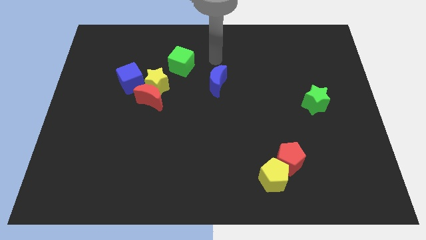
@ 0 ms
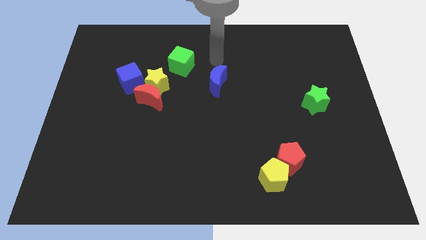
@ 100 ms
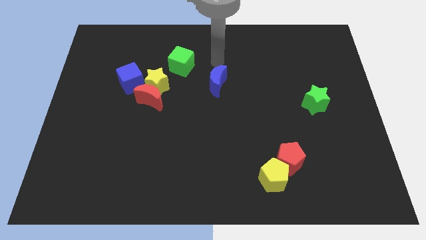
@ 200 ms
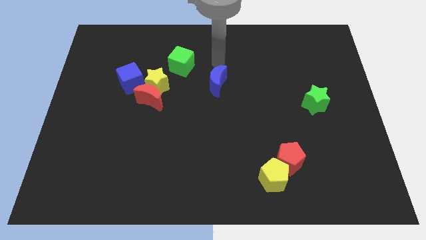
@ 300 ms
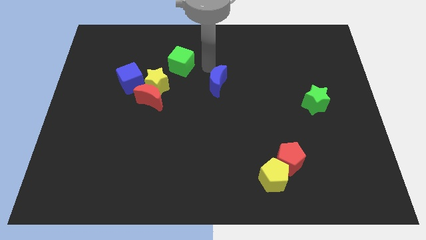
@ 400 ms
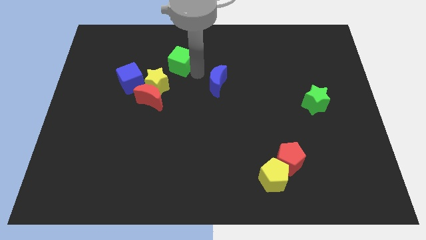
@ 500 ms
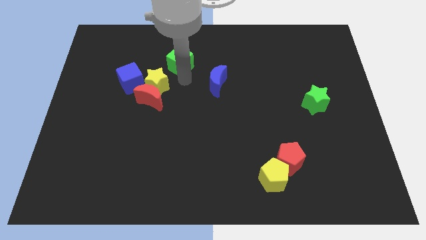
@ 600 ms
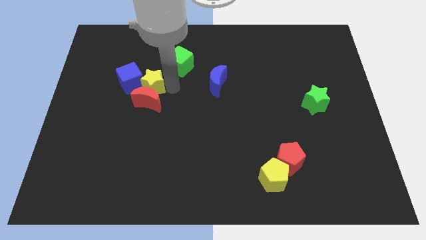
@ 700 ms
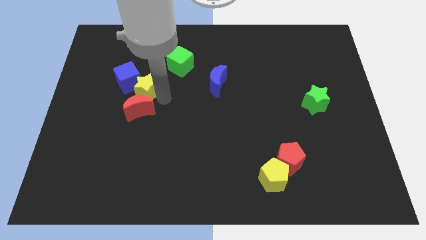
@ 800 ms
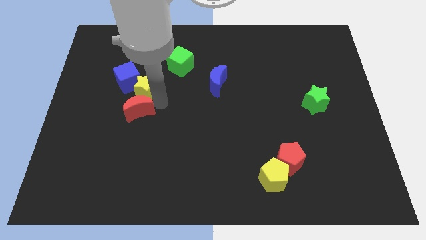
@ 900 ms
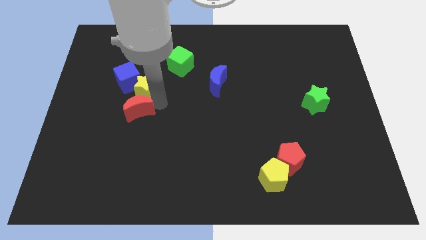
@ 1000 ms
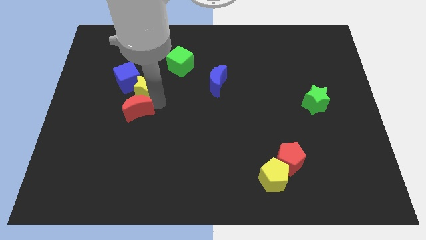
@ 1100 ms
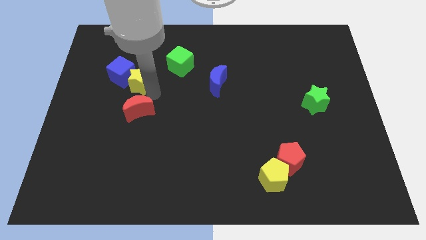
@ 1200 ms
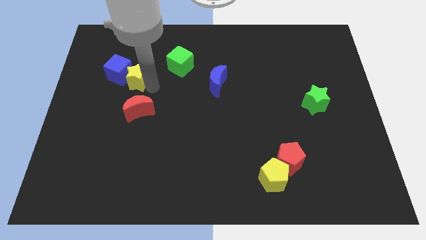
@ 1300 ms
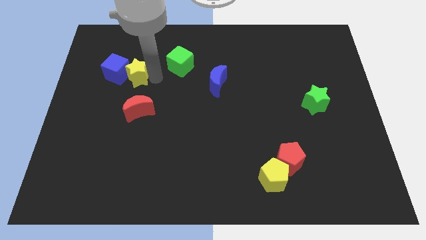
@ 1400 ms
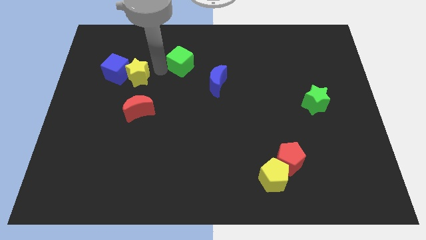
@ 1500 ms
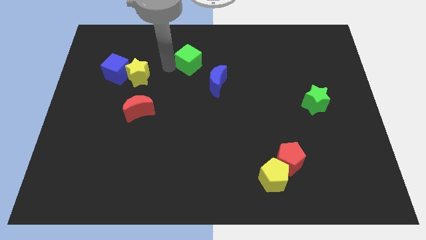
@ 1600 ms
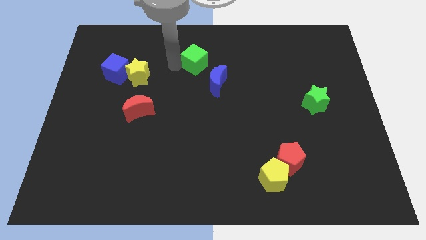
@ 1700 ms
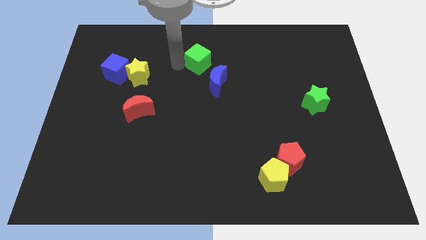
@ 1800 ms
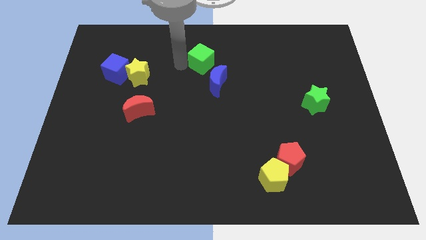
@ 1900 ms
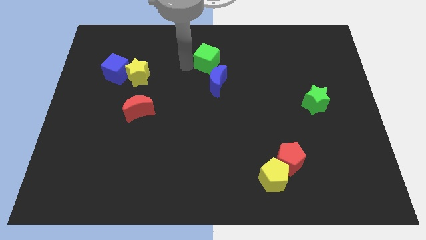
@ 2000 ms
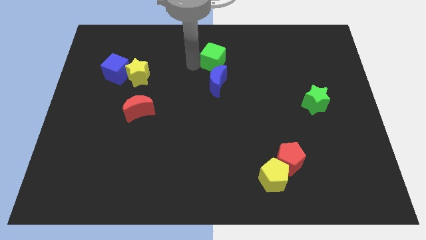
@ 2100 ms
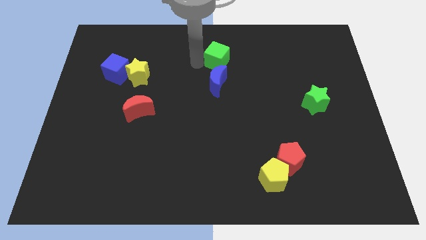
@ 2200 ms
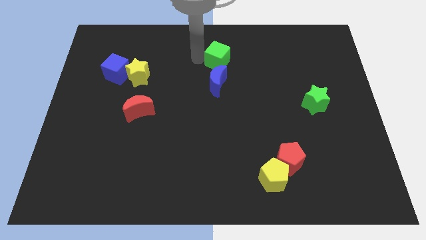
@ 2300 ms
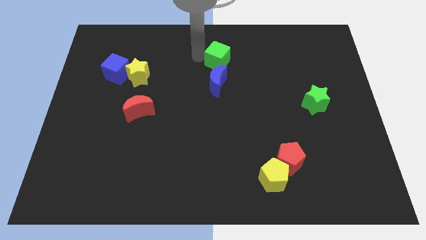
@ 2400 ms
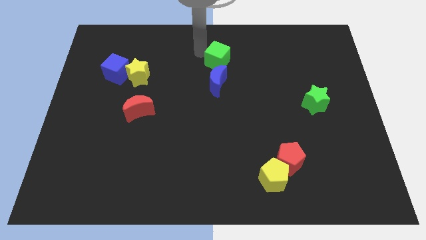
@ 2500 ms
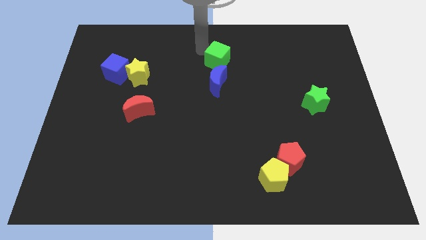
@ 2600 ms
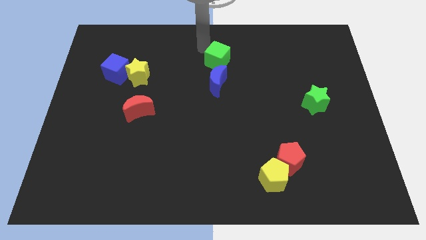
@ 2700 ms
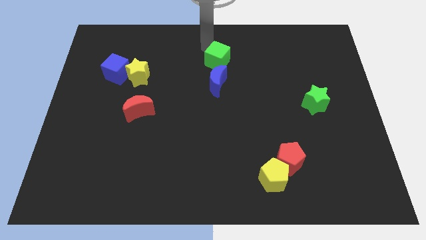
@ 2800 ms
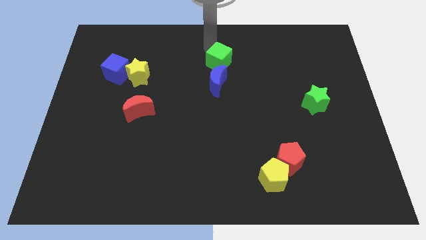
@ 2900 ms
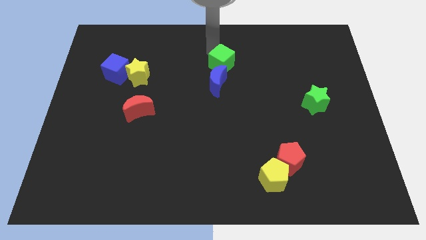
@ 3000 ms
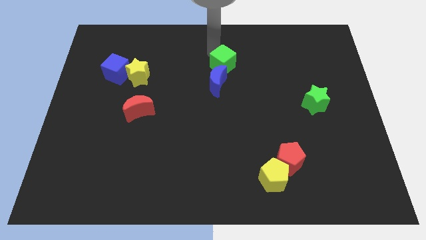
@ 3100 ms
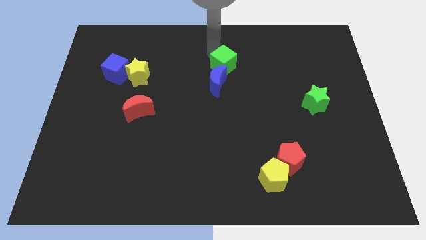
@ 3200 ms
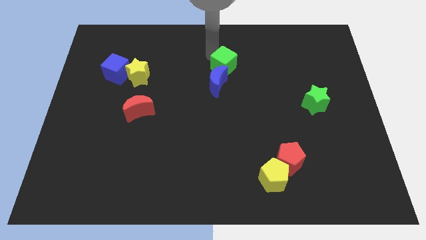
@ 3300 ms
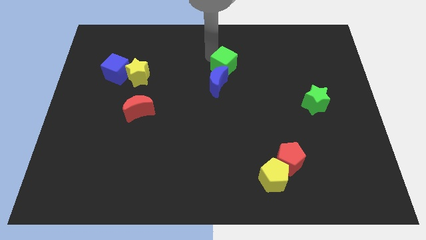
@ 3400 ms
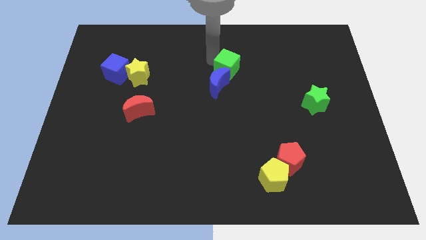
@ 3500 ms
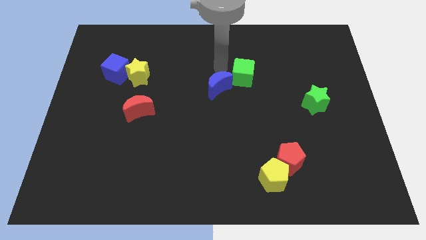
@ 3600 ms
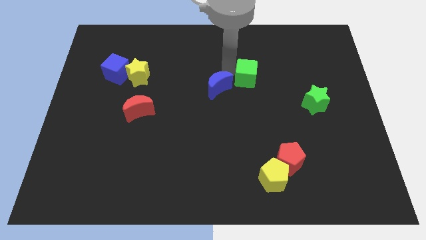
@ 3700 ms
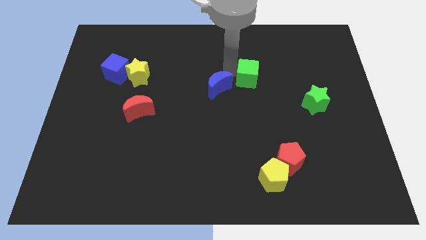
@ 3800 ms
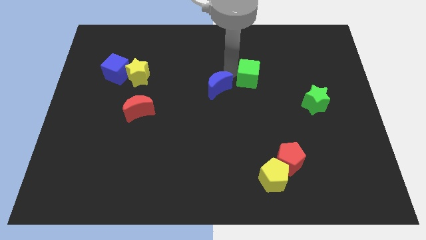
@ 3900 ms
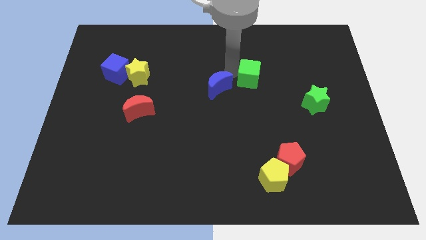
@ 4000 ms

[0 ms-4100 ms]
spread the blocks all over the board

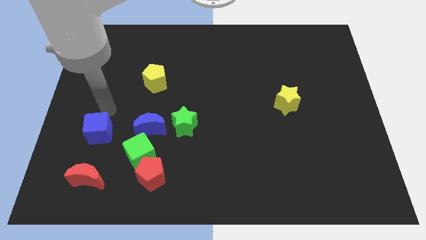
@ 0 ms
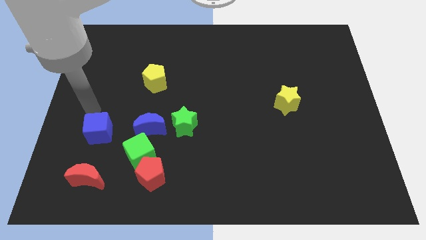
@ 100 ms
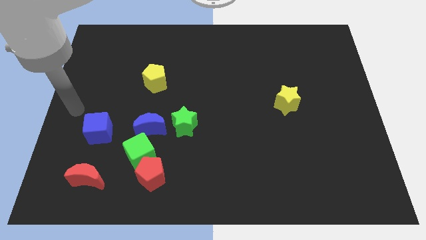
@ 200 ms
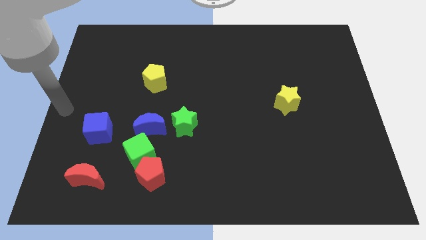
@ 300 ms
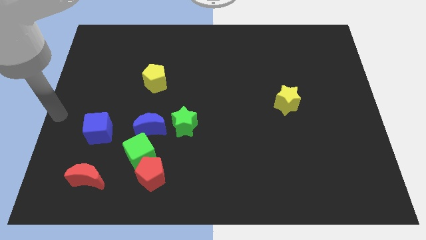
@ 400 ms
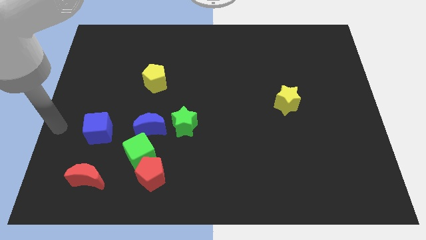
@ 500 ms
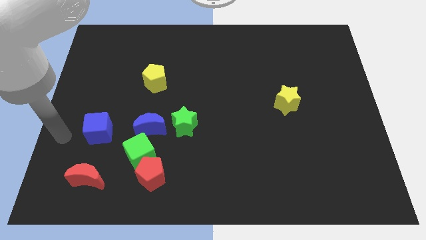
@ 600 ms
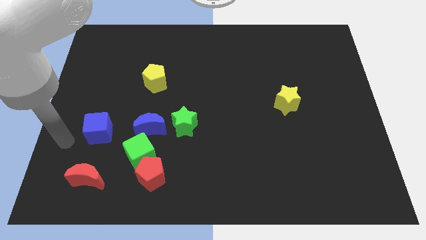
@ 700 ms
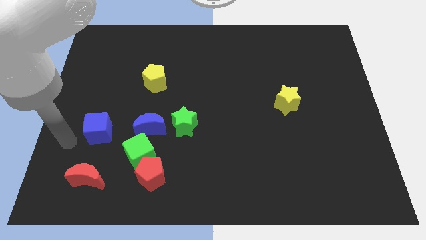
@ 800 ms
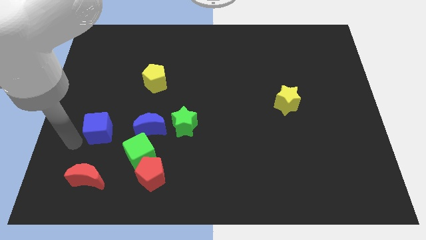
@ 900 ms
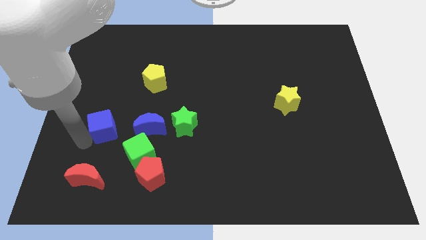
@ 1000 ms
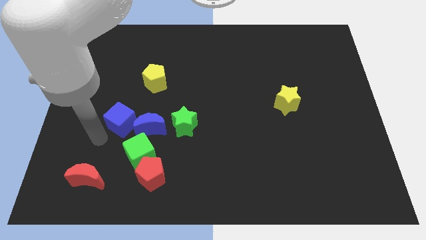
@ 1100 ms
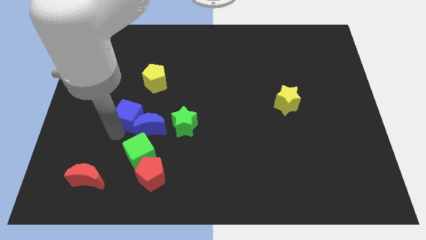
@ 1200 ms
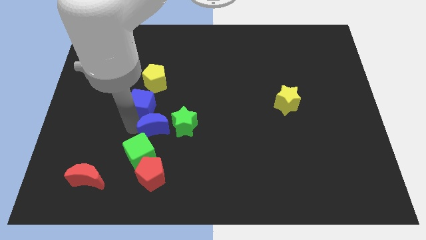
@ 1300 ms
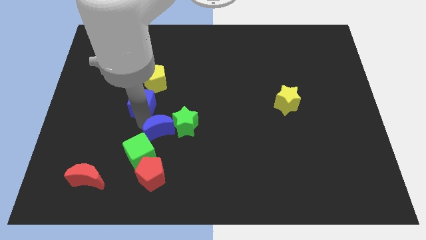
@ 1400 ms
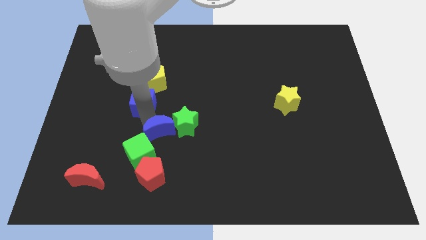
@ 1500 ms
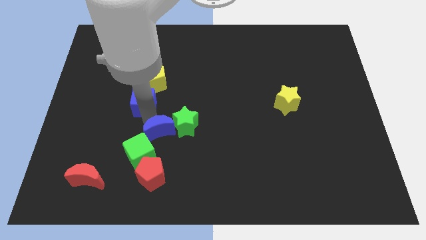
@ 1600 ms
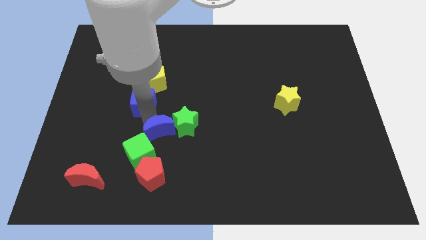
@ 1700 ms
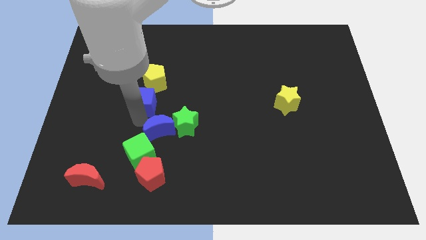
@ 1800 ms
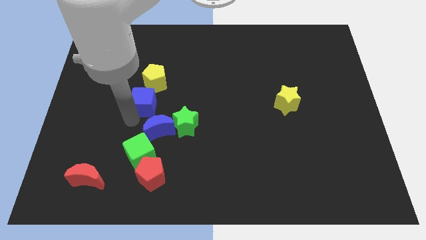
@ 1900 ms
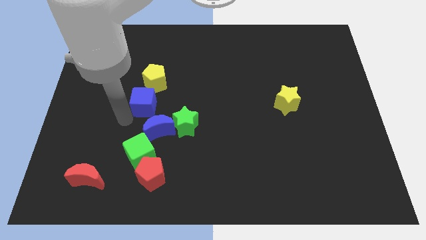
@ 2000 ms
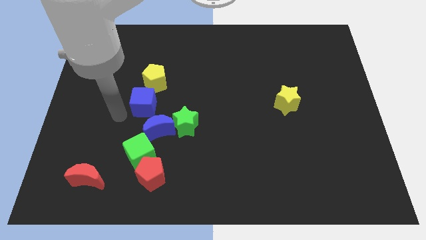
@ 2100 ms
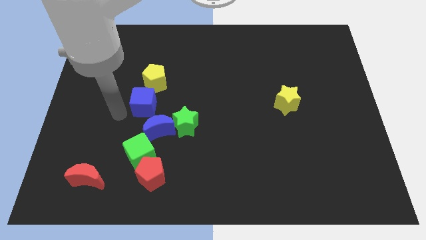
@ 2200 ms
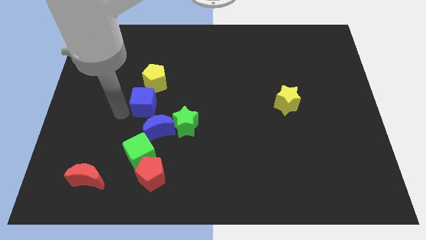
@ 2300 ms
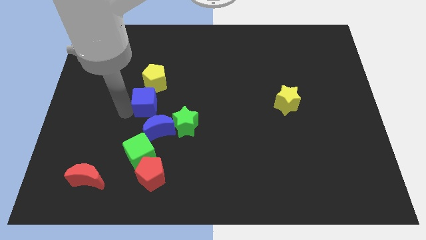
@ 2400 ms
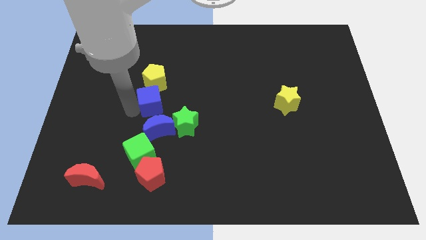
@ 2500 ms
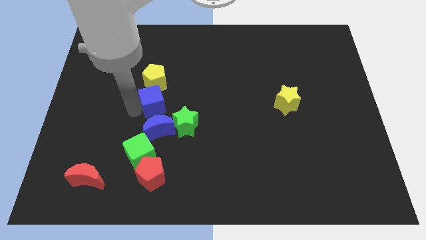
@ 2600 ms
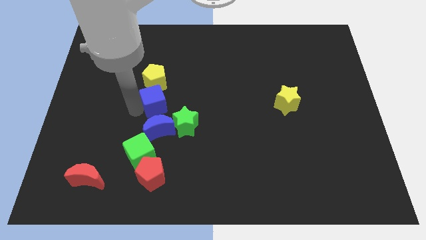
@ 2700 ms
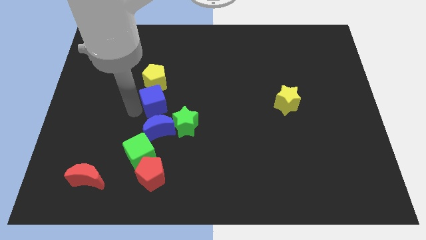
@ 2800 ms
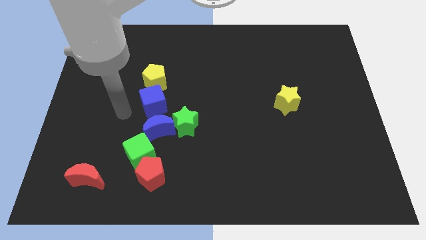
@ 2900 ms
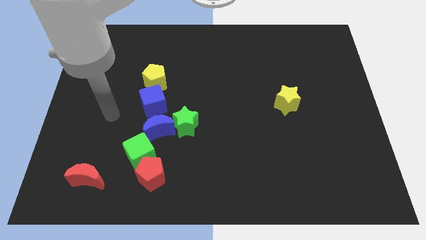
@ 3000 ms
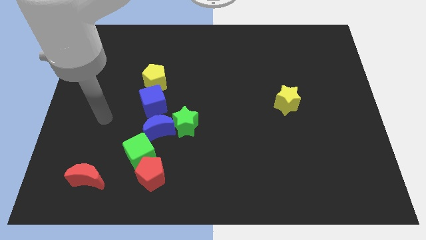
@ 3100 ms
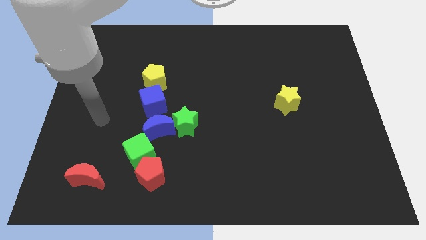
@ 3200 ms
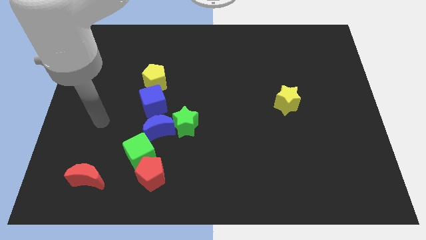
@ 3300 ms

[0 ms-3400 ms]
move the blue cube close to the yellow pentagon

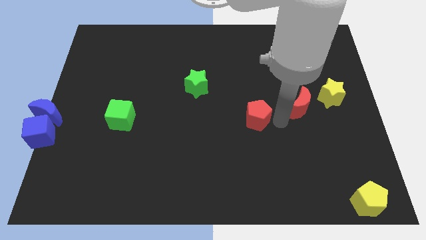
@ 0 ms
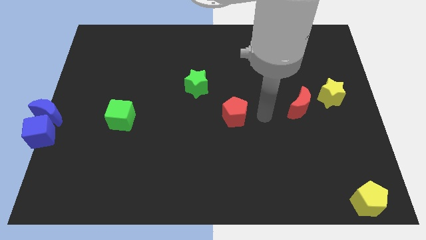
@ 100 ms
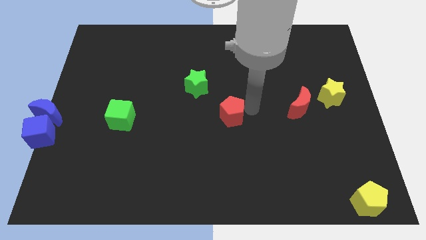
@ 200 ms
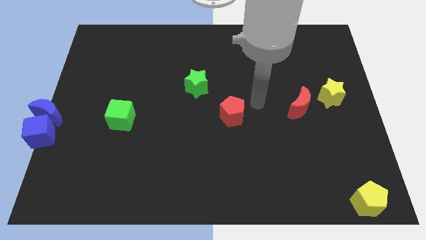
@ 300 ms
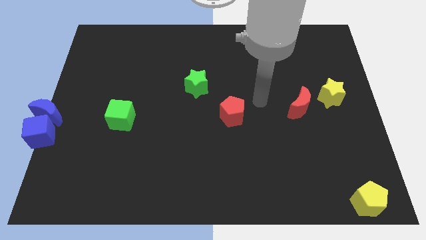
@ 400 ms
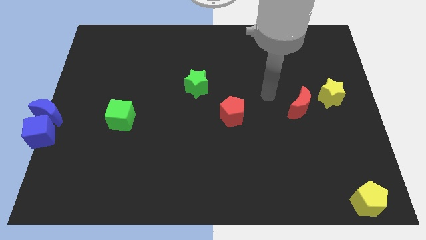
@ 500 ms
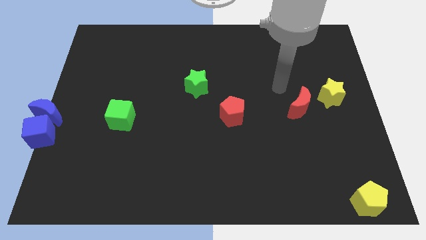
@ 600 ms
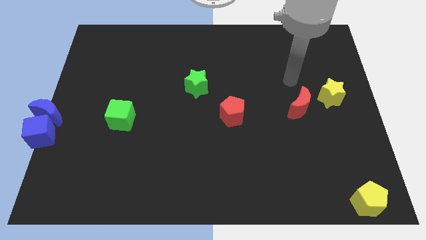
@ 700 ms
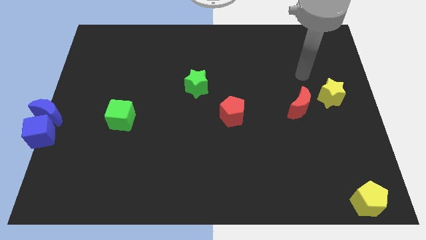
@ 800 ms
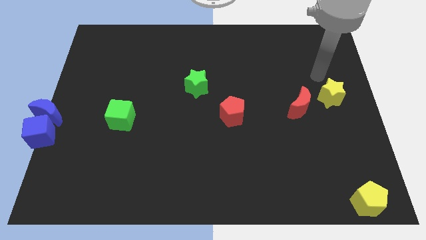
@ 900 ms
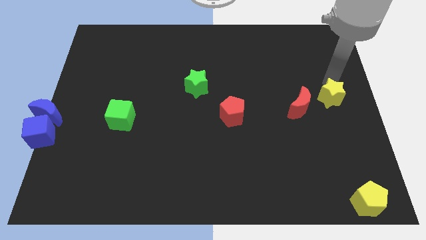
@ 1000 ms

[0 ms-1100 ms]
push red pentagon to the center

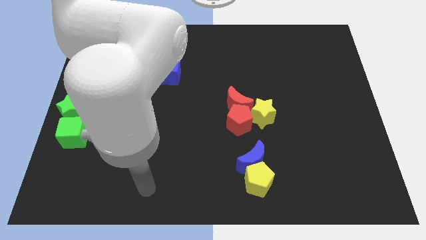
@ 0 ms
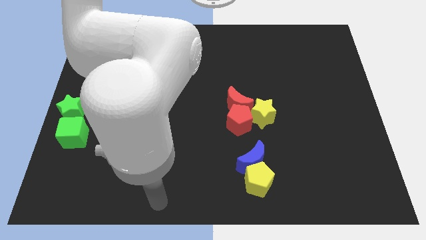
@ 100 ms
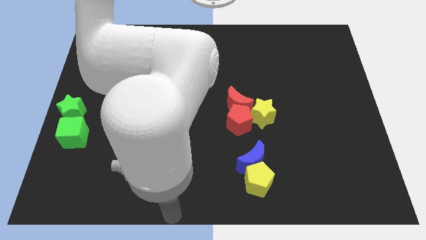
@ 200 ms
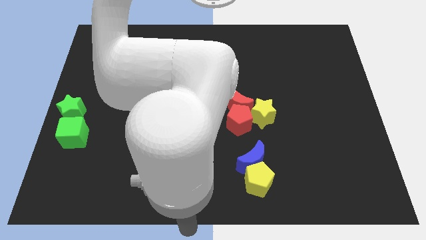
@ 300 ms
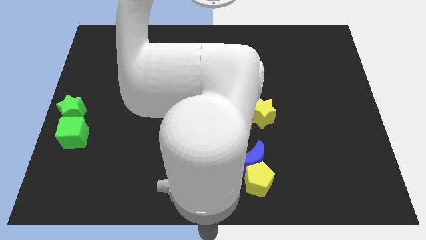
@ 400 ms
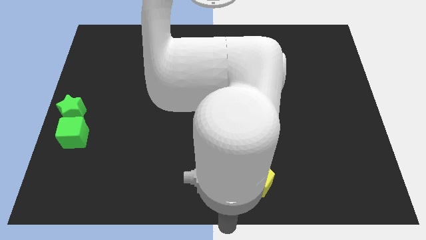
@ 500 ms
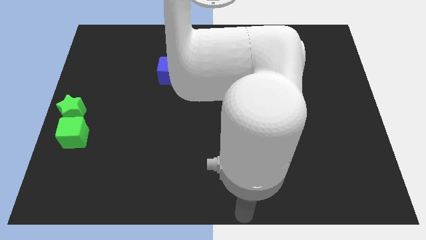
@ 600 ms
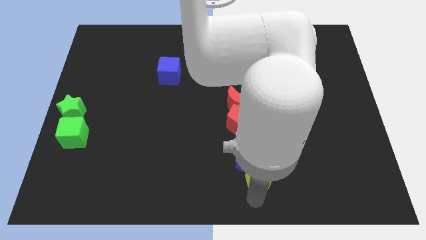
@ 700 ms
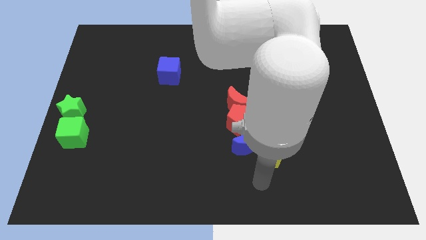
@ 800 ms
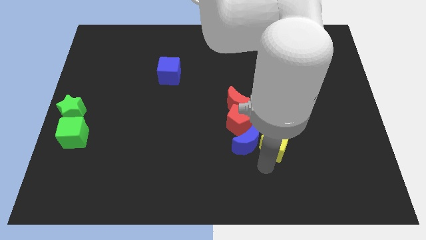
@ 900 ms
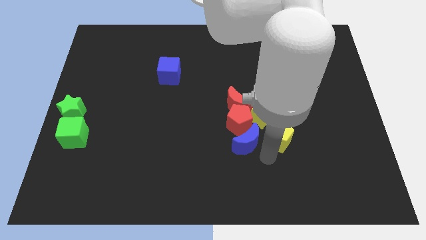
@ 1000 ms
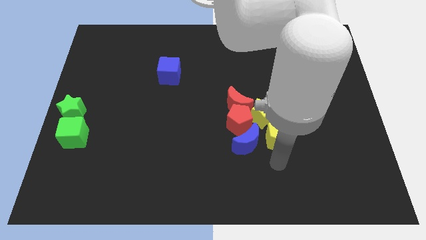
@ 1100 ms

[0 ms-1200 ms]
move the yellow pentagon to the right of the blue crescent
